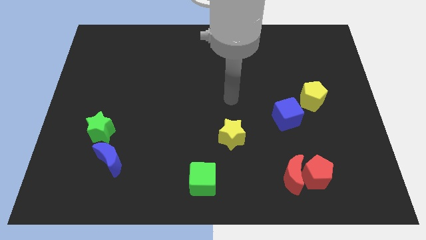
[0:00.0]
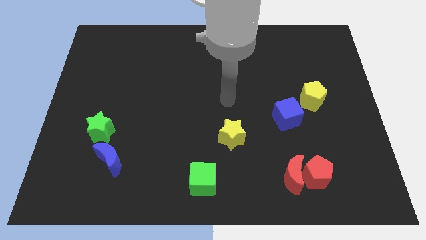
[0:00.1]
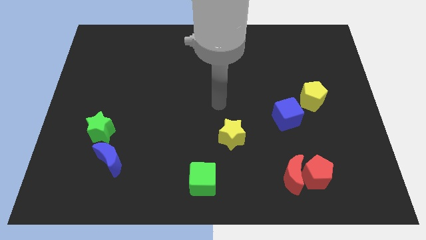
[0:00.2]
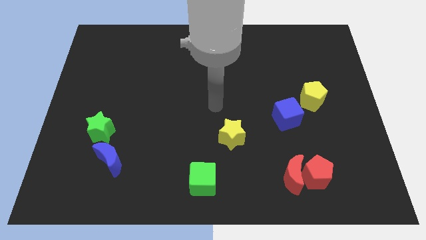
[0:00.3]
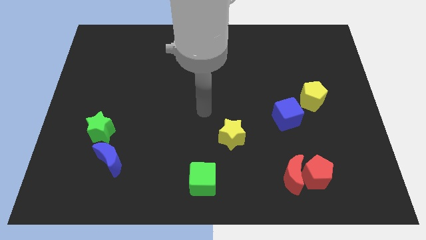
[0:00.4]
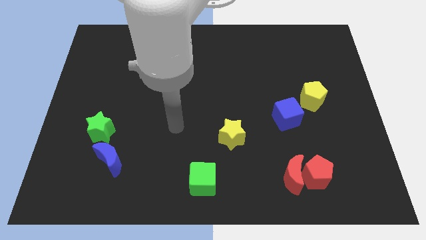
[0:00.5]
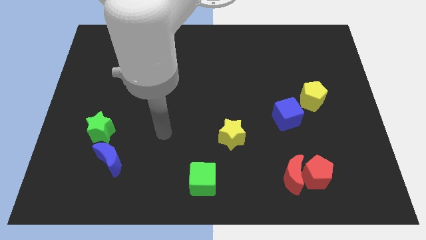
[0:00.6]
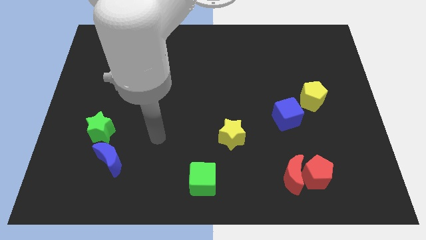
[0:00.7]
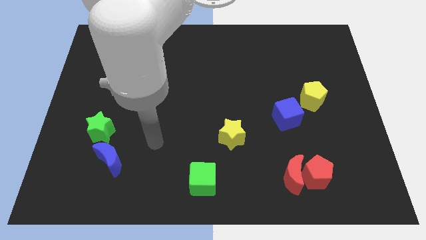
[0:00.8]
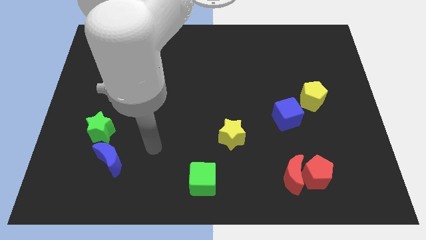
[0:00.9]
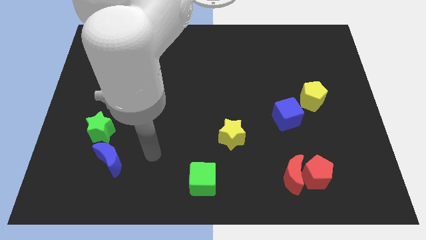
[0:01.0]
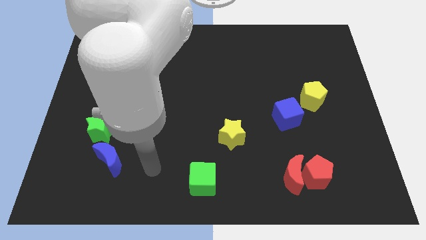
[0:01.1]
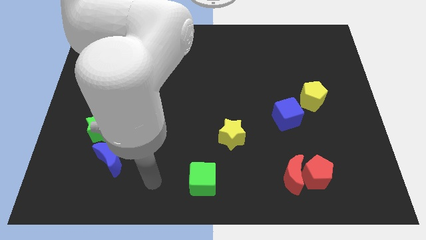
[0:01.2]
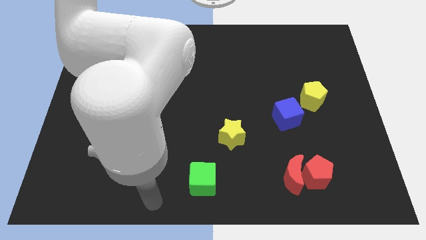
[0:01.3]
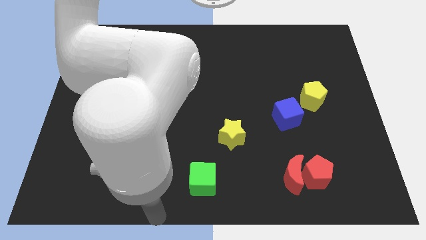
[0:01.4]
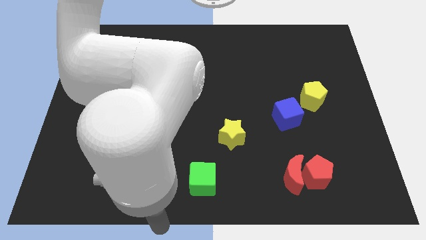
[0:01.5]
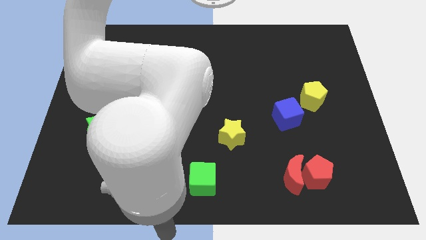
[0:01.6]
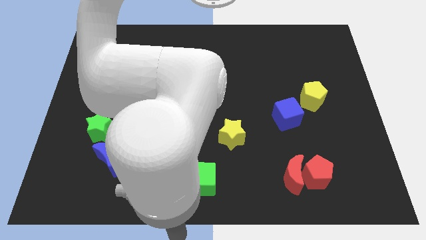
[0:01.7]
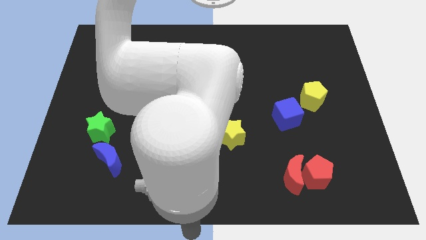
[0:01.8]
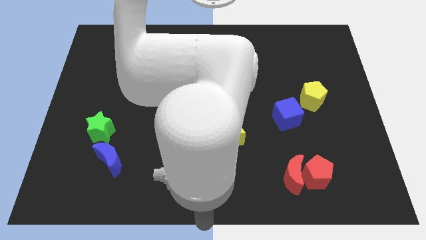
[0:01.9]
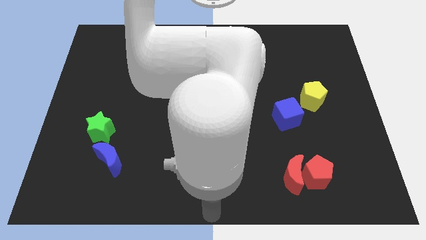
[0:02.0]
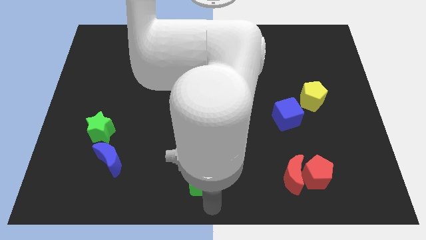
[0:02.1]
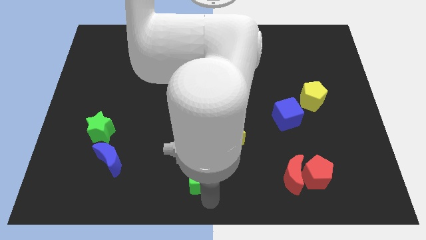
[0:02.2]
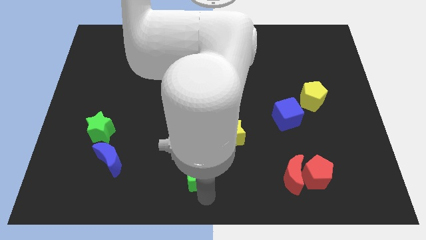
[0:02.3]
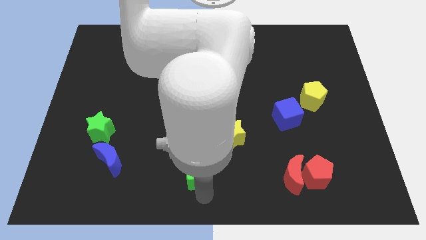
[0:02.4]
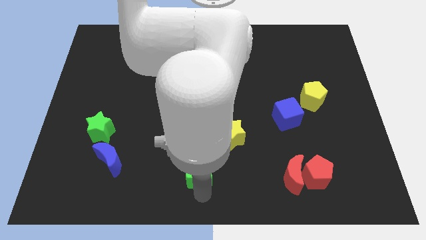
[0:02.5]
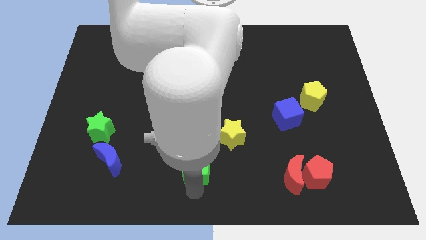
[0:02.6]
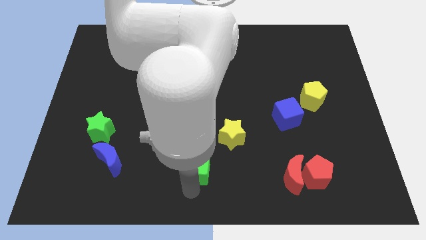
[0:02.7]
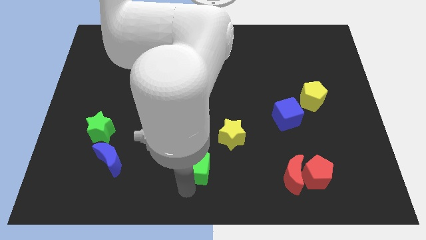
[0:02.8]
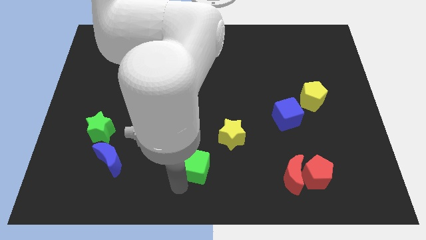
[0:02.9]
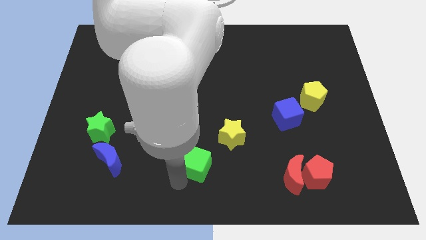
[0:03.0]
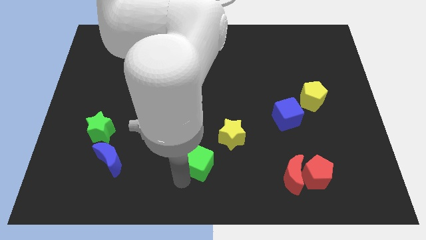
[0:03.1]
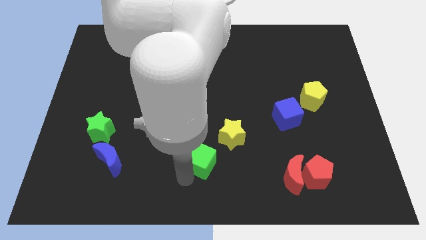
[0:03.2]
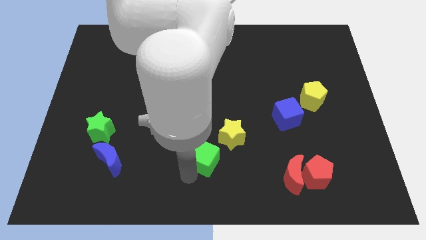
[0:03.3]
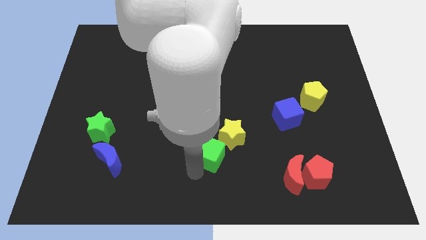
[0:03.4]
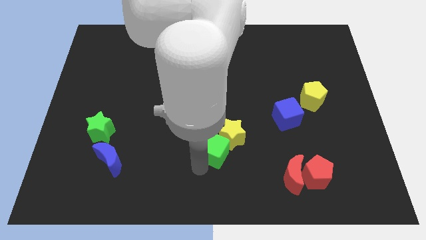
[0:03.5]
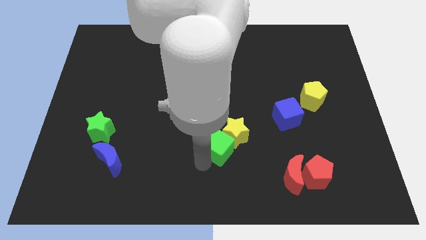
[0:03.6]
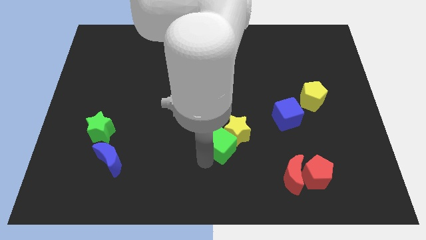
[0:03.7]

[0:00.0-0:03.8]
put the green cube towards the yellow star

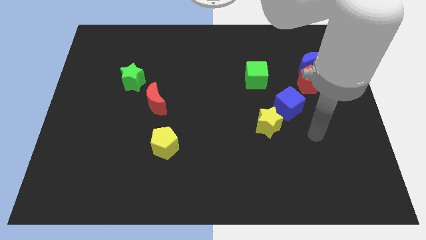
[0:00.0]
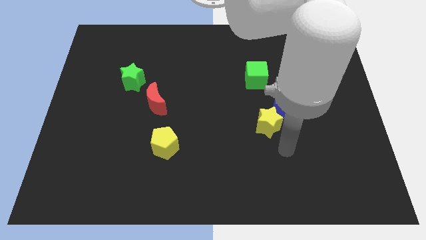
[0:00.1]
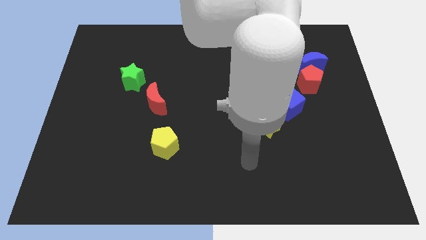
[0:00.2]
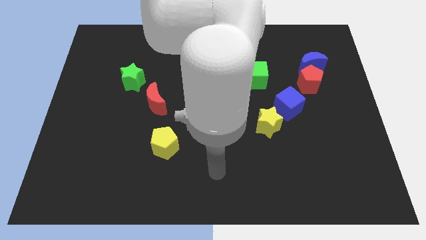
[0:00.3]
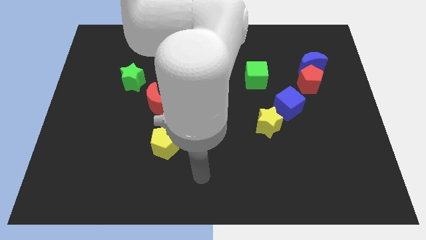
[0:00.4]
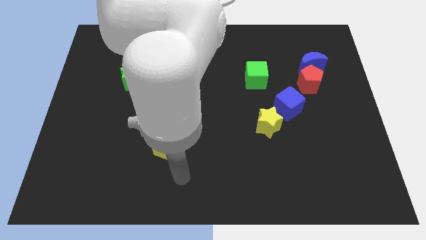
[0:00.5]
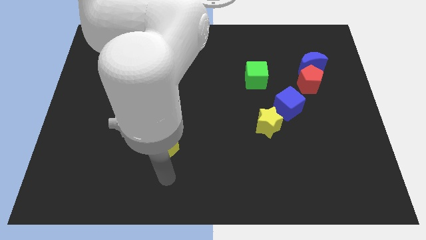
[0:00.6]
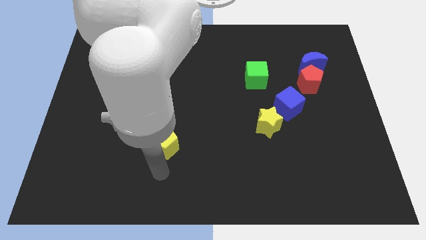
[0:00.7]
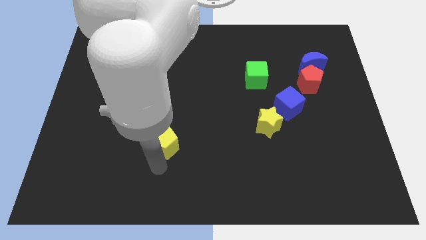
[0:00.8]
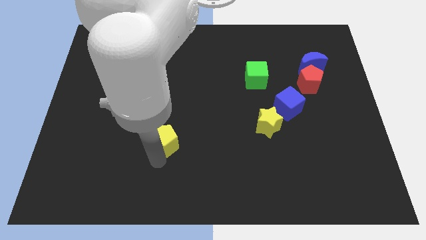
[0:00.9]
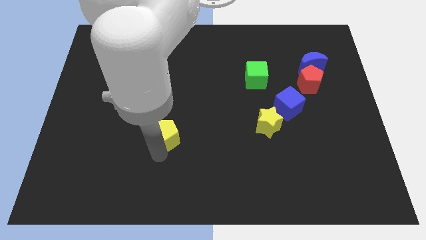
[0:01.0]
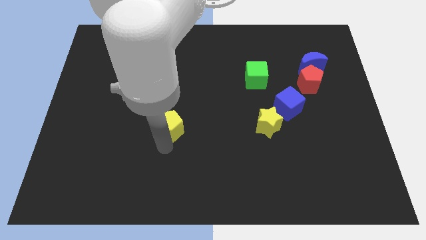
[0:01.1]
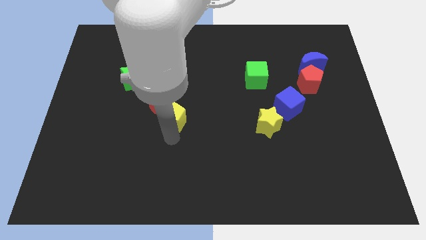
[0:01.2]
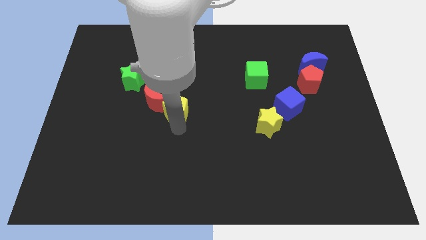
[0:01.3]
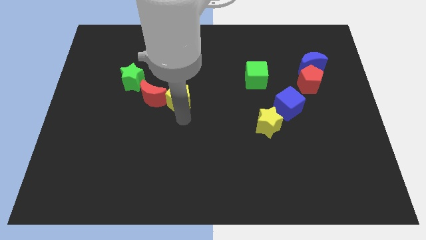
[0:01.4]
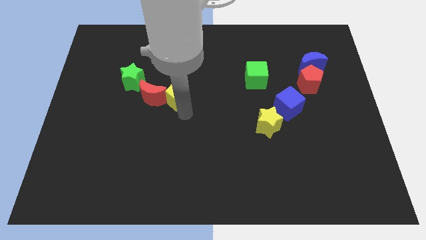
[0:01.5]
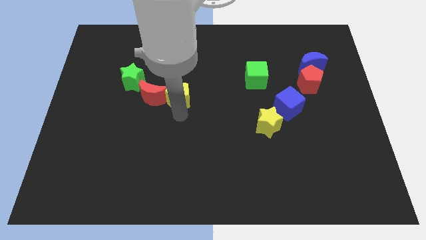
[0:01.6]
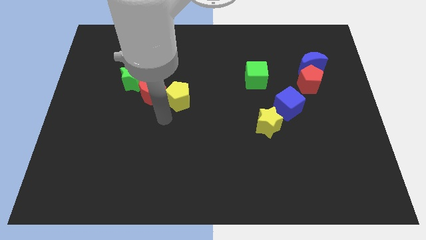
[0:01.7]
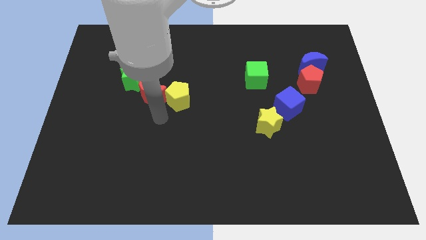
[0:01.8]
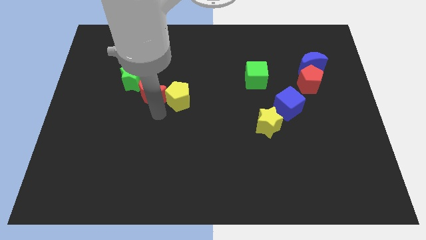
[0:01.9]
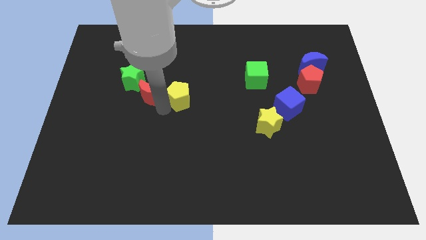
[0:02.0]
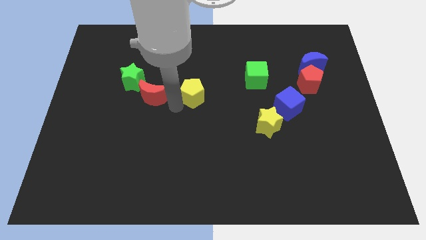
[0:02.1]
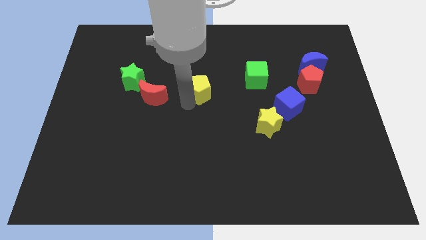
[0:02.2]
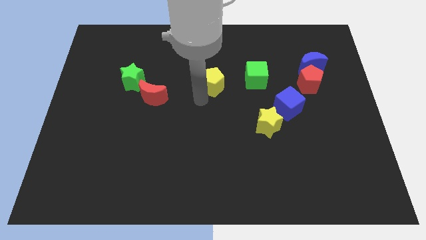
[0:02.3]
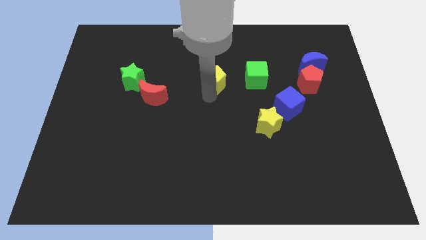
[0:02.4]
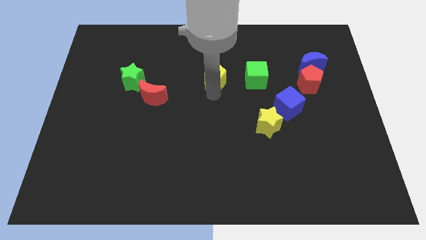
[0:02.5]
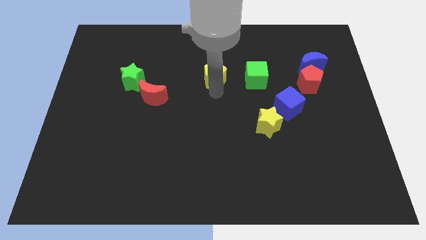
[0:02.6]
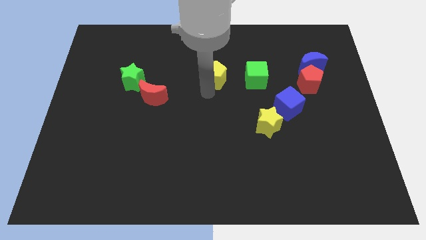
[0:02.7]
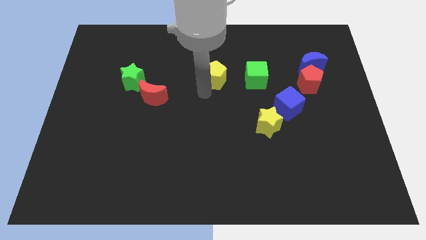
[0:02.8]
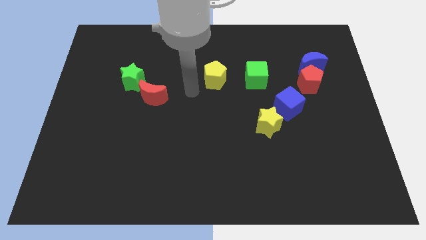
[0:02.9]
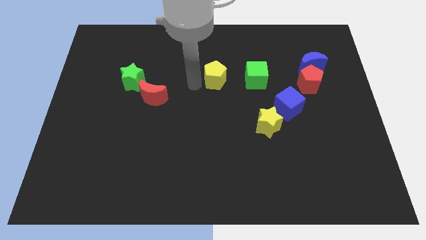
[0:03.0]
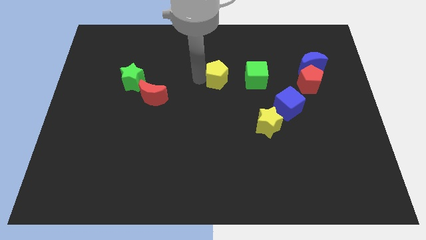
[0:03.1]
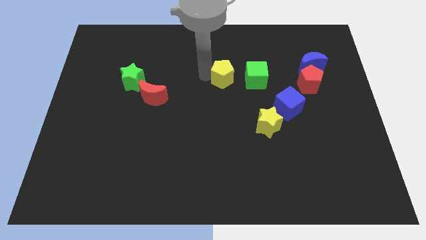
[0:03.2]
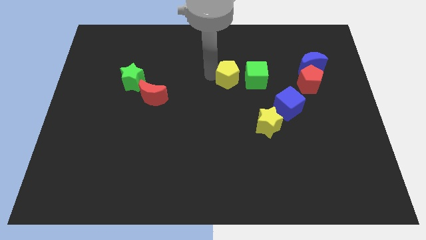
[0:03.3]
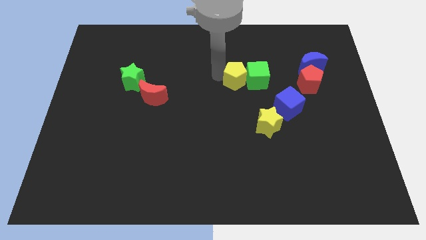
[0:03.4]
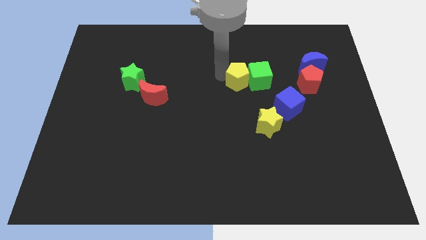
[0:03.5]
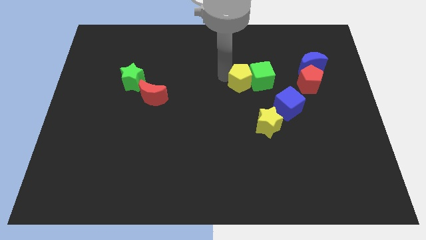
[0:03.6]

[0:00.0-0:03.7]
push the yellow pentagon to the green cube

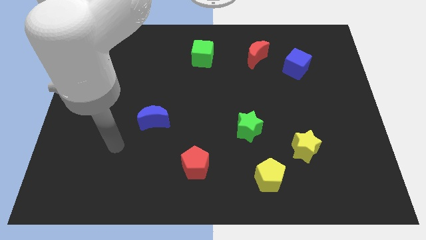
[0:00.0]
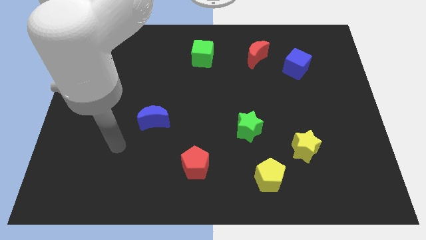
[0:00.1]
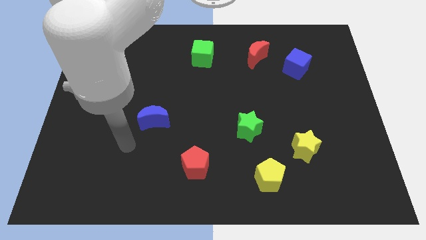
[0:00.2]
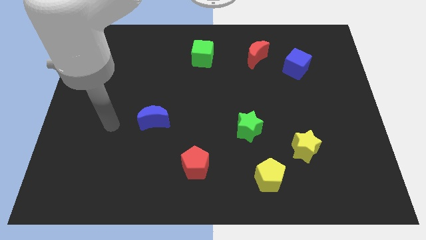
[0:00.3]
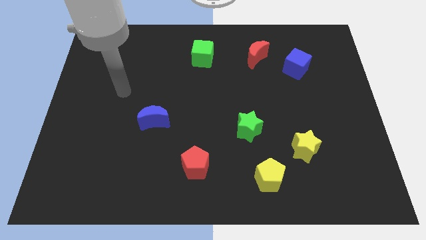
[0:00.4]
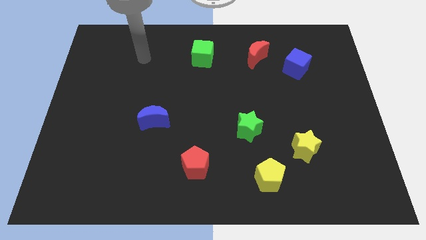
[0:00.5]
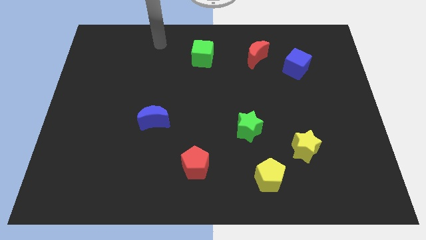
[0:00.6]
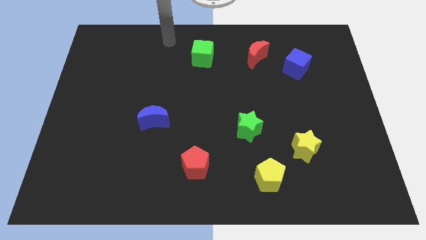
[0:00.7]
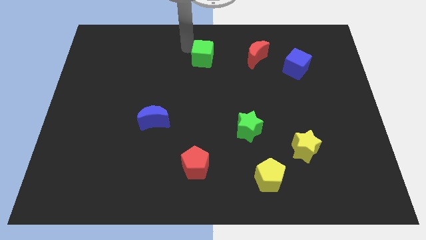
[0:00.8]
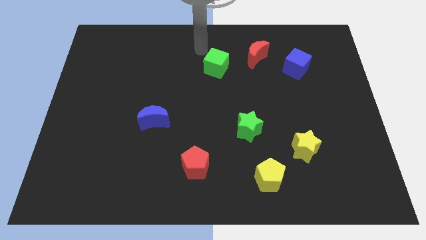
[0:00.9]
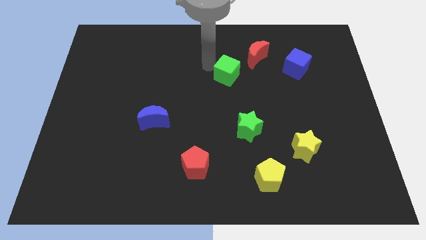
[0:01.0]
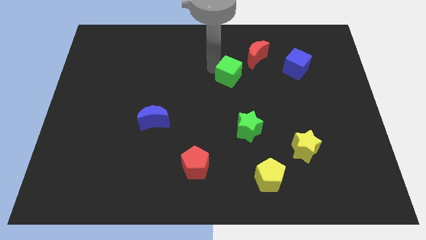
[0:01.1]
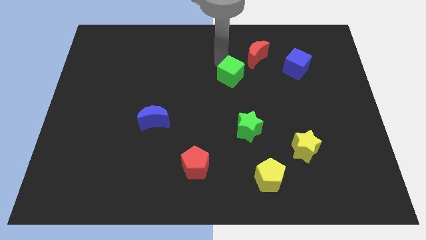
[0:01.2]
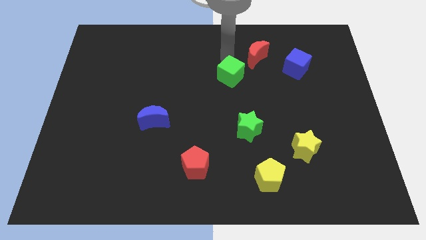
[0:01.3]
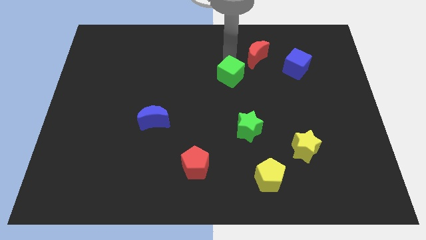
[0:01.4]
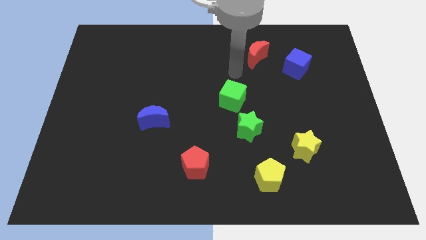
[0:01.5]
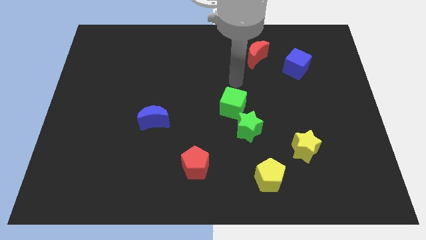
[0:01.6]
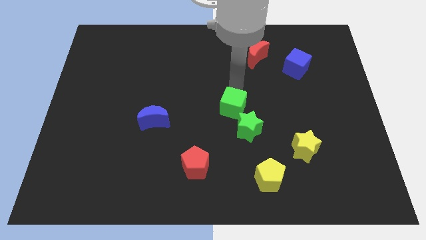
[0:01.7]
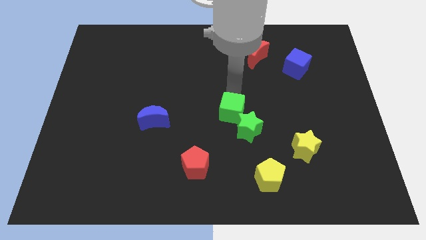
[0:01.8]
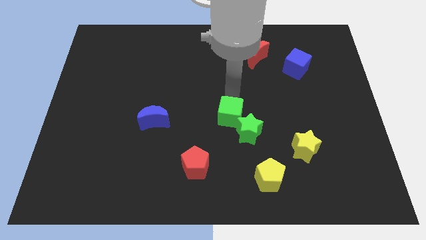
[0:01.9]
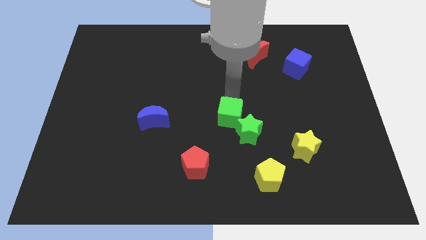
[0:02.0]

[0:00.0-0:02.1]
put the green cube towards the green star
